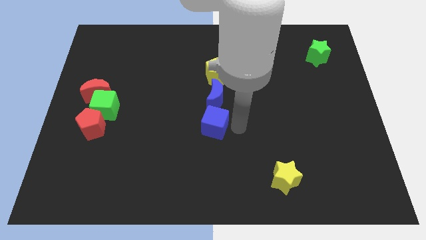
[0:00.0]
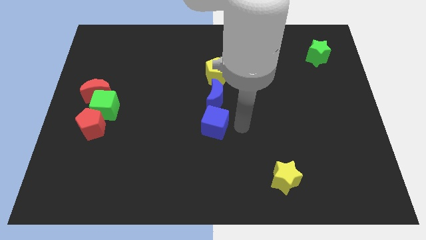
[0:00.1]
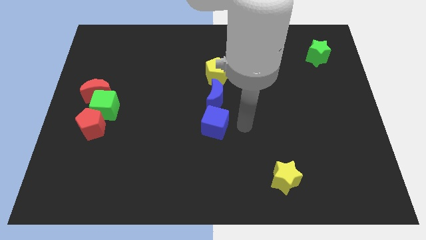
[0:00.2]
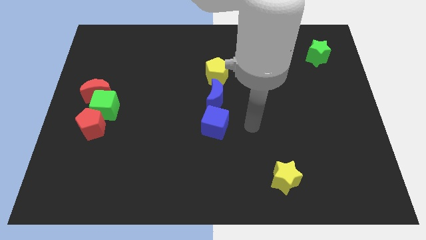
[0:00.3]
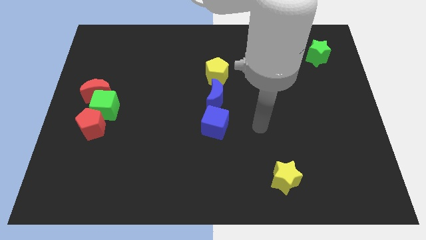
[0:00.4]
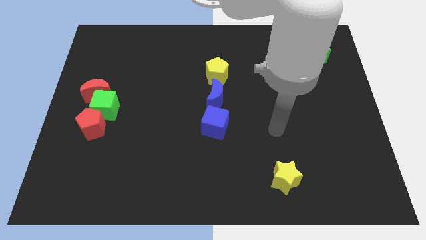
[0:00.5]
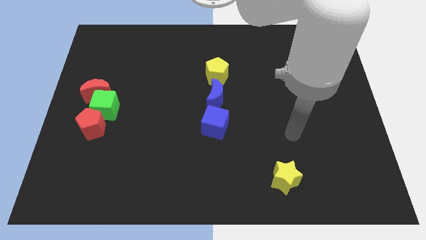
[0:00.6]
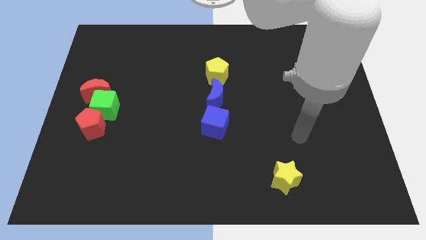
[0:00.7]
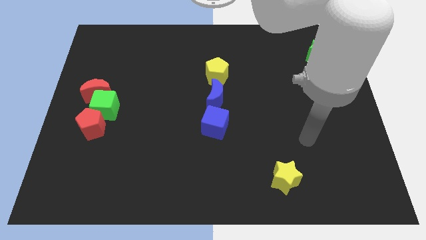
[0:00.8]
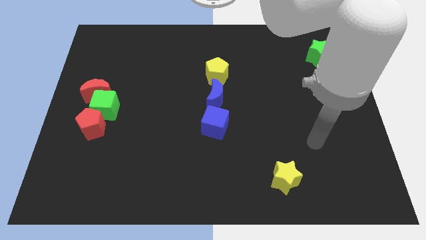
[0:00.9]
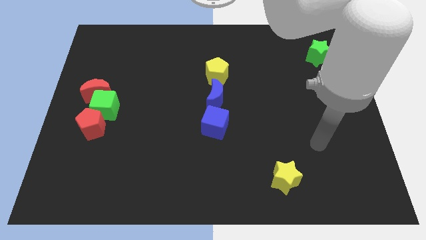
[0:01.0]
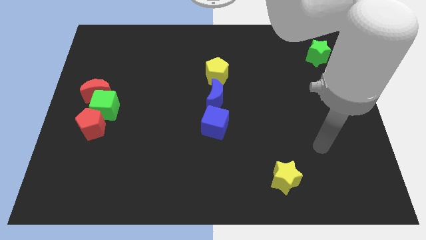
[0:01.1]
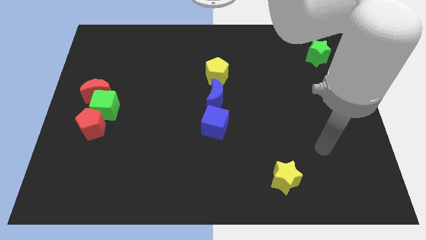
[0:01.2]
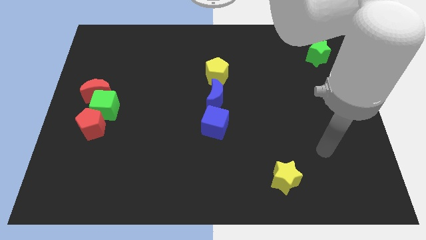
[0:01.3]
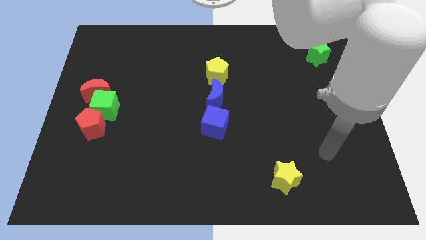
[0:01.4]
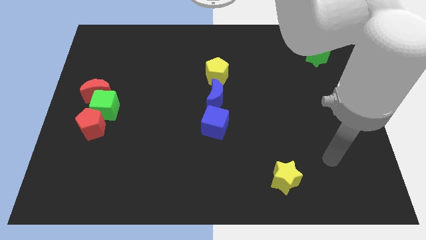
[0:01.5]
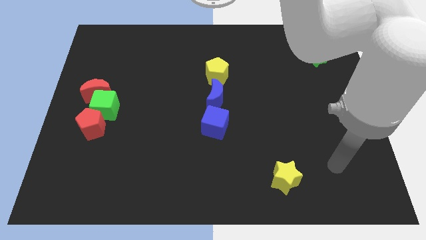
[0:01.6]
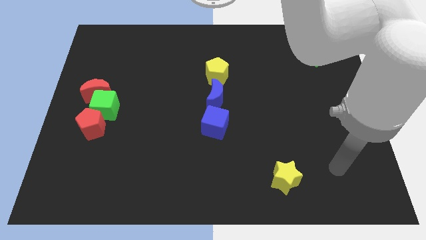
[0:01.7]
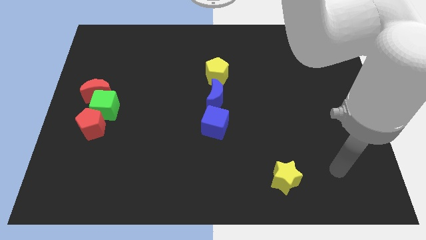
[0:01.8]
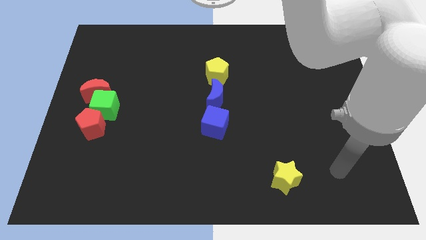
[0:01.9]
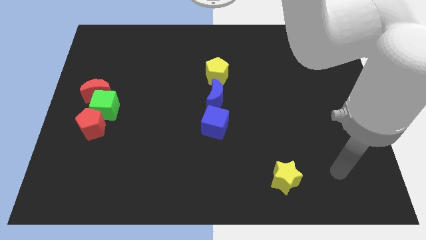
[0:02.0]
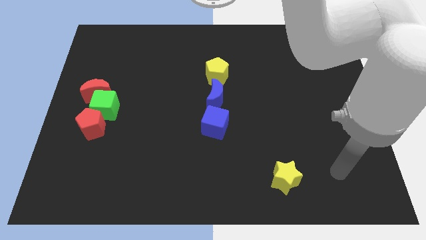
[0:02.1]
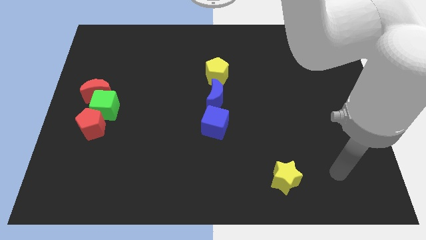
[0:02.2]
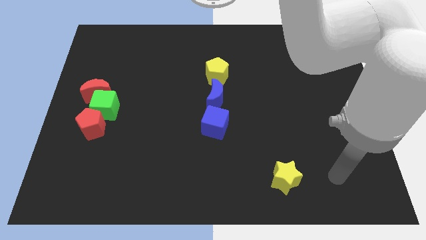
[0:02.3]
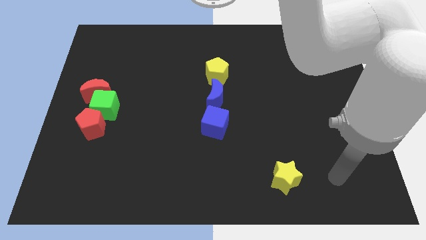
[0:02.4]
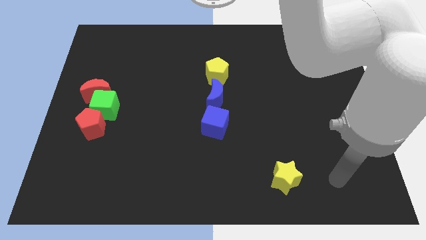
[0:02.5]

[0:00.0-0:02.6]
place your arm at the right of the yellow star

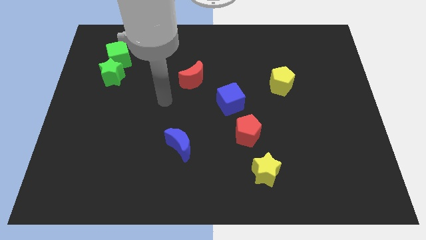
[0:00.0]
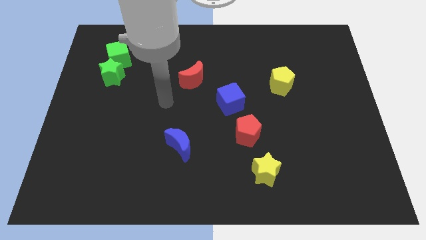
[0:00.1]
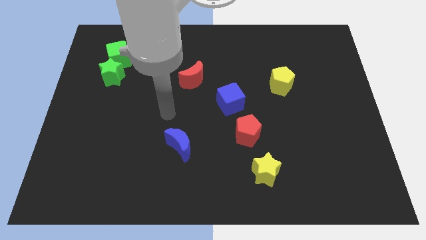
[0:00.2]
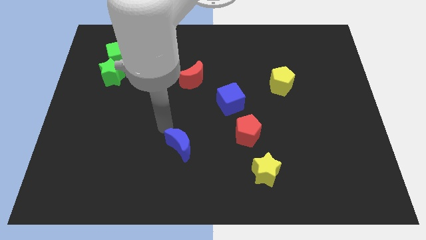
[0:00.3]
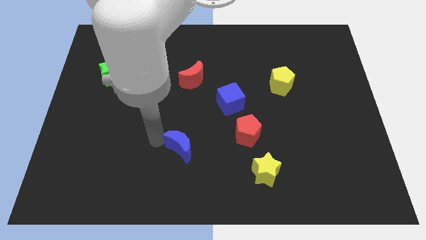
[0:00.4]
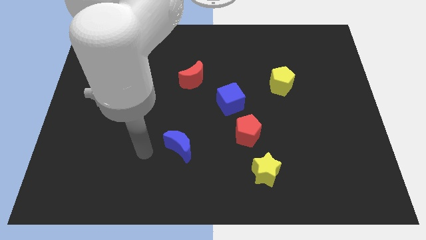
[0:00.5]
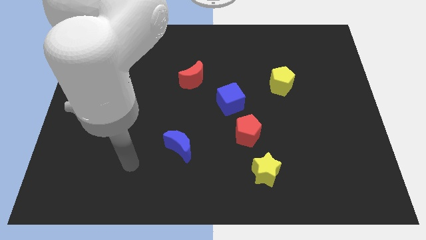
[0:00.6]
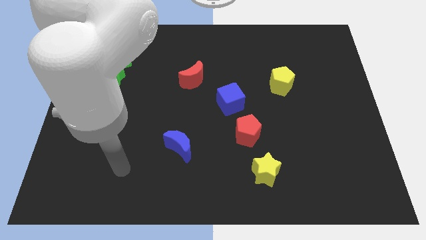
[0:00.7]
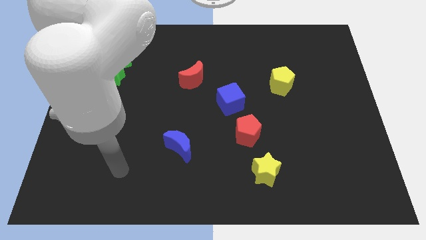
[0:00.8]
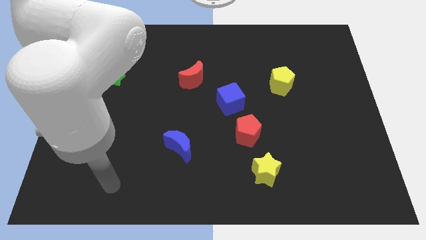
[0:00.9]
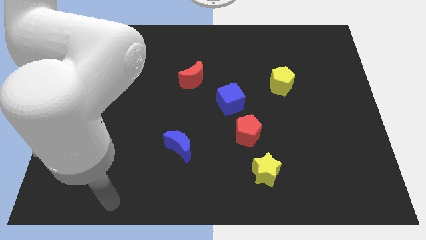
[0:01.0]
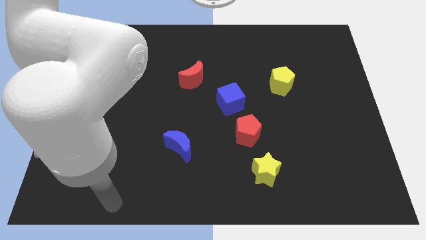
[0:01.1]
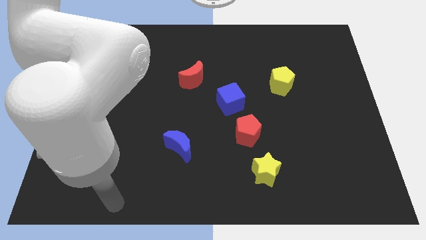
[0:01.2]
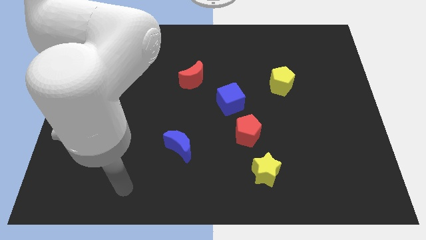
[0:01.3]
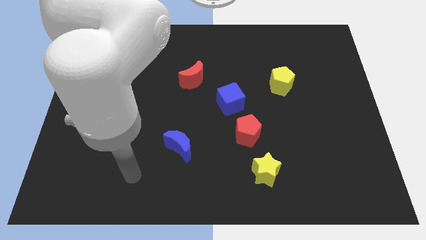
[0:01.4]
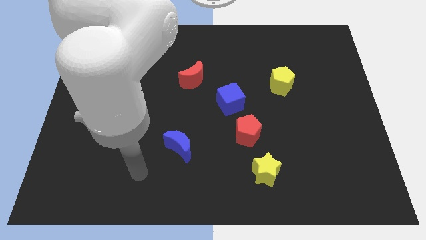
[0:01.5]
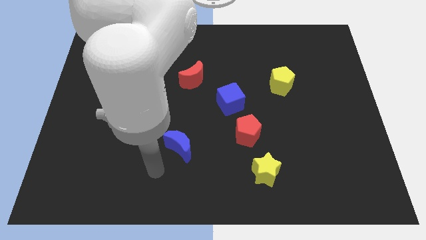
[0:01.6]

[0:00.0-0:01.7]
push the blue crescent slightly to the right side of the board

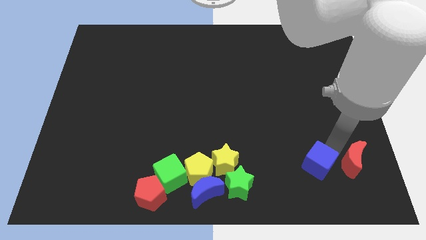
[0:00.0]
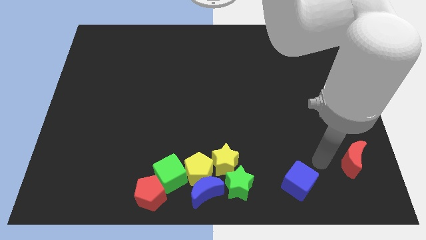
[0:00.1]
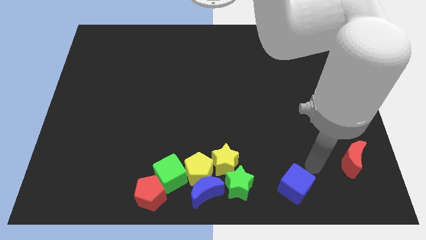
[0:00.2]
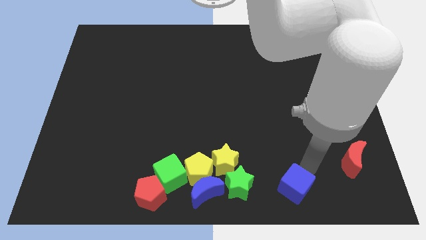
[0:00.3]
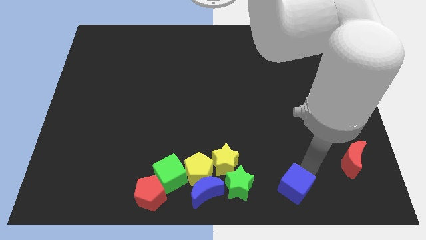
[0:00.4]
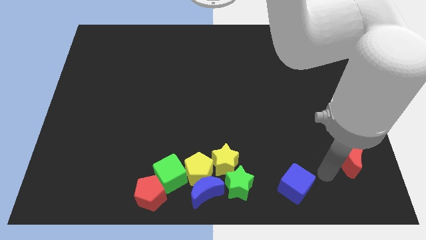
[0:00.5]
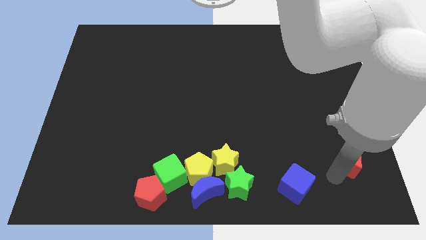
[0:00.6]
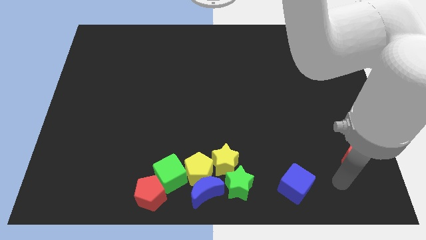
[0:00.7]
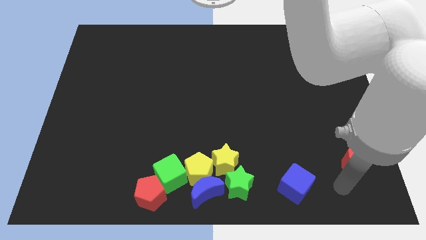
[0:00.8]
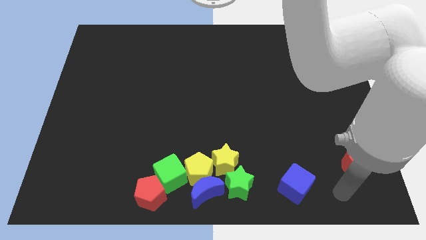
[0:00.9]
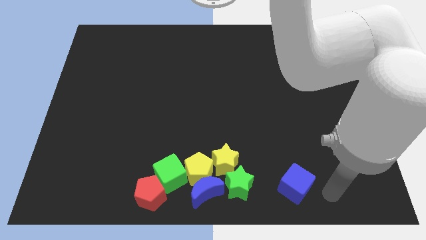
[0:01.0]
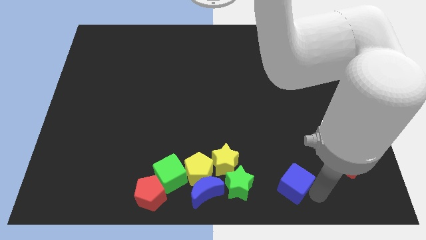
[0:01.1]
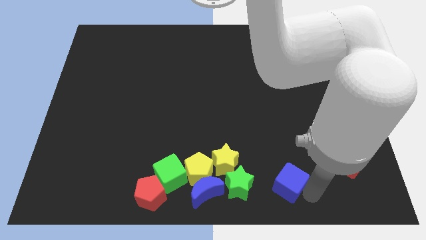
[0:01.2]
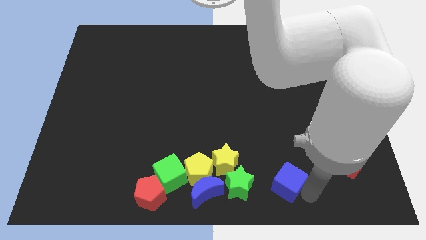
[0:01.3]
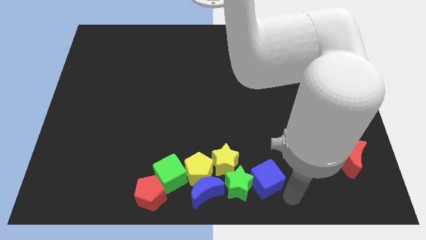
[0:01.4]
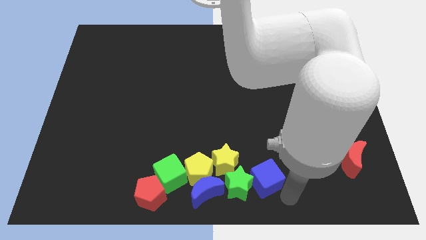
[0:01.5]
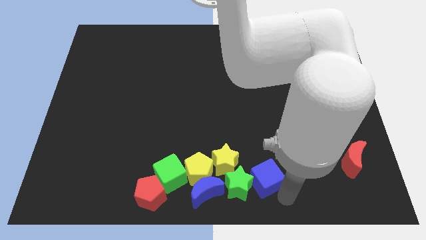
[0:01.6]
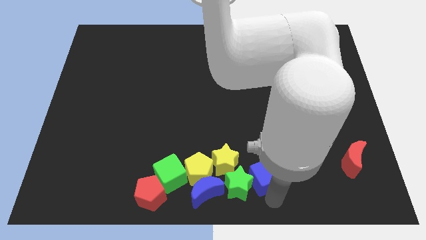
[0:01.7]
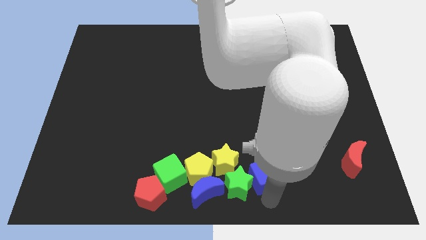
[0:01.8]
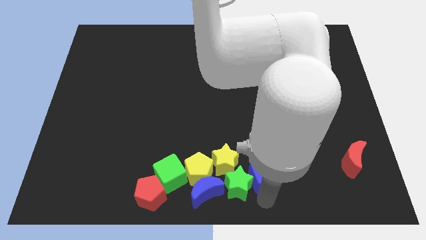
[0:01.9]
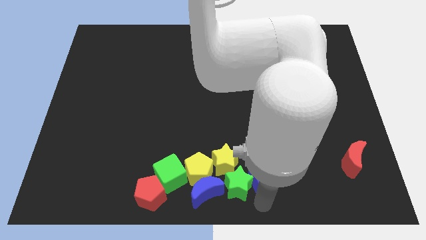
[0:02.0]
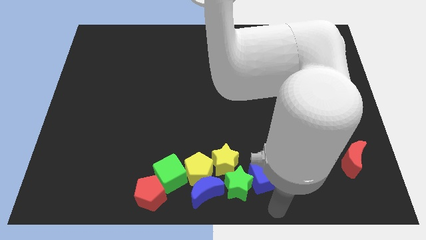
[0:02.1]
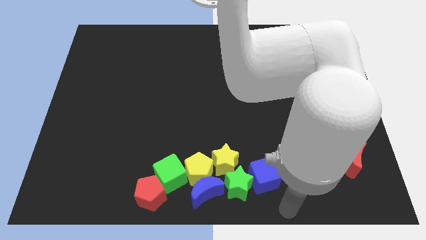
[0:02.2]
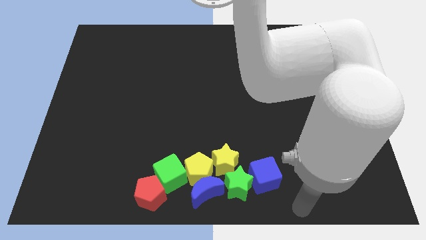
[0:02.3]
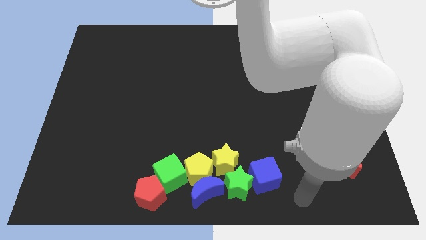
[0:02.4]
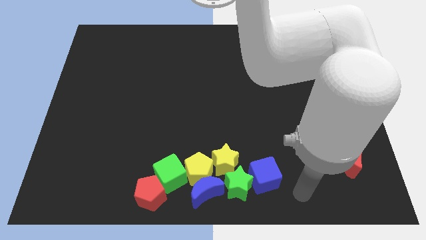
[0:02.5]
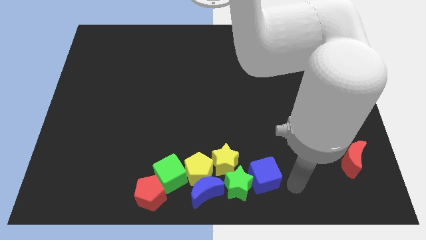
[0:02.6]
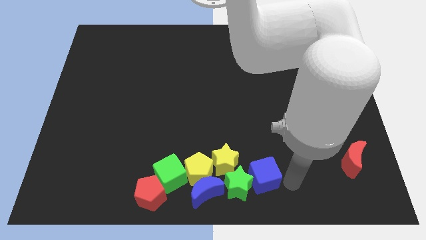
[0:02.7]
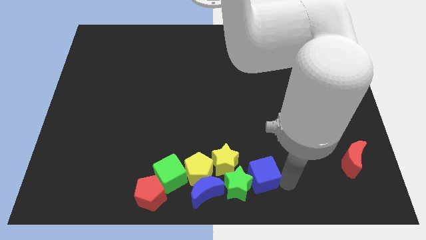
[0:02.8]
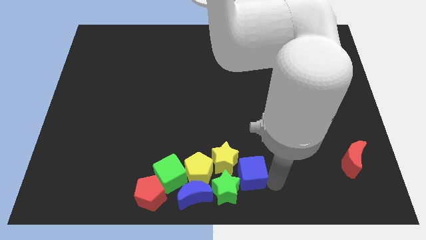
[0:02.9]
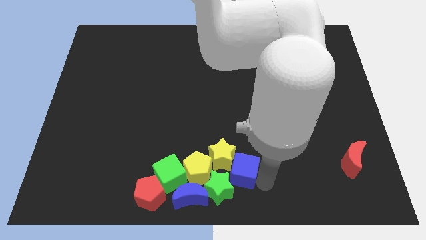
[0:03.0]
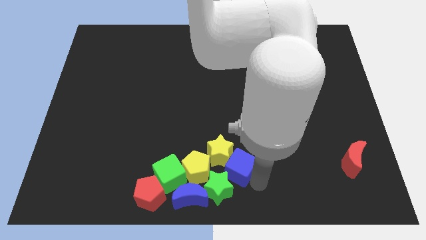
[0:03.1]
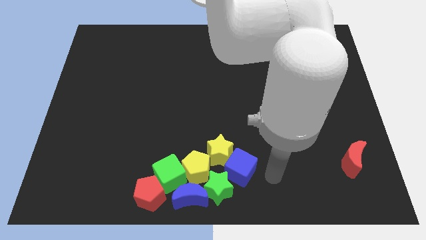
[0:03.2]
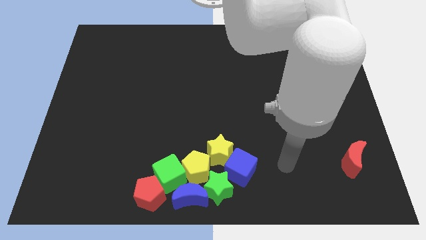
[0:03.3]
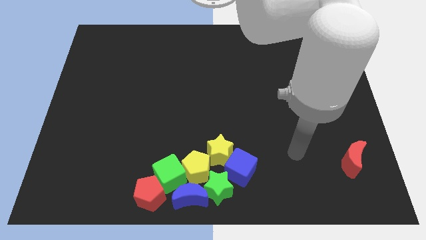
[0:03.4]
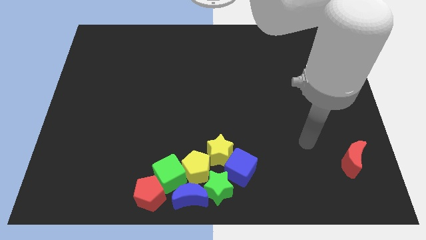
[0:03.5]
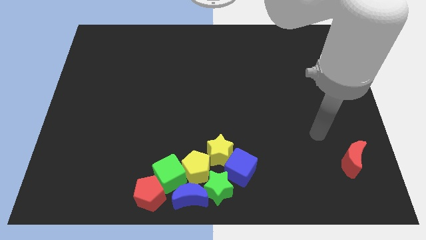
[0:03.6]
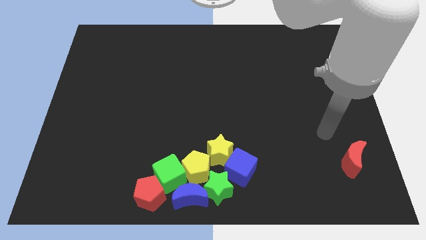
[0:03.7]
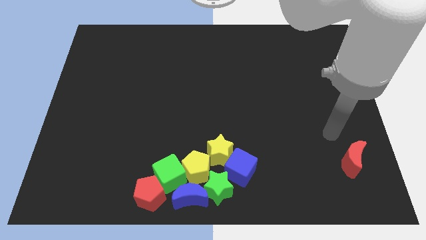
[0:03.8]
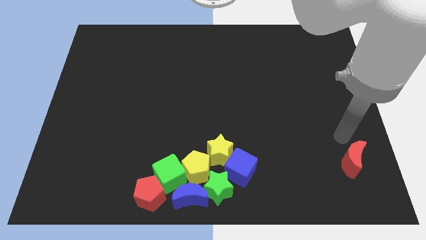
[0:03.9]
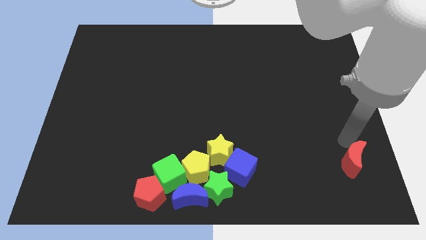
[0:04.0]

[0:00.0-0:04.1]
push blue cube into the other objects

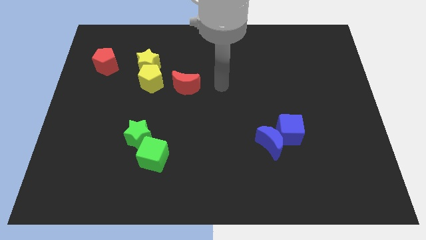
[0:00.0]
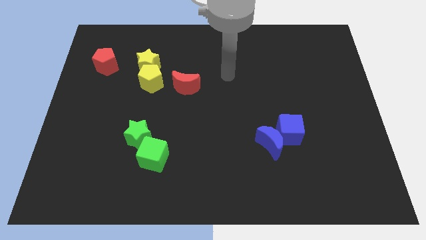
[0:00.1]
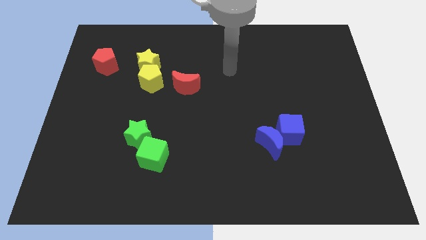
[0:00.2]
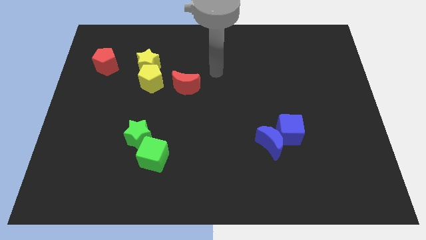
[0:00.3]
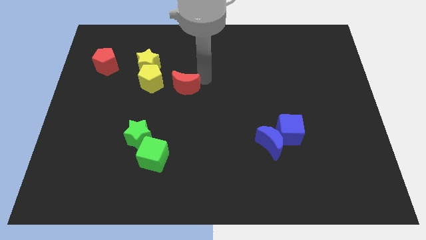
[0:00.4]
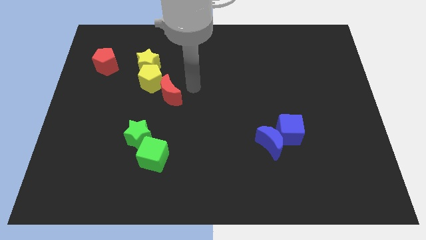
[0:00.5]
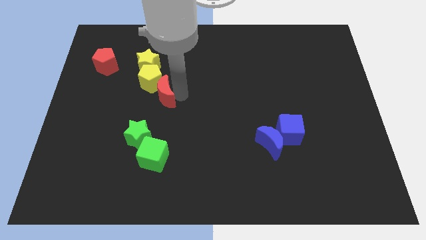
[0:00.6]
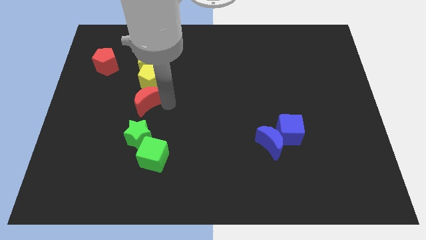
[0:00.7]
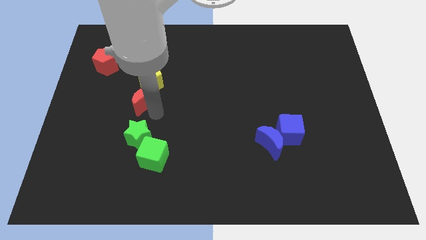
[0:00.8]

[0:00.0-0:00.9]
place the red crescent below the yellow pentagon
